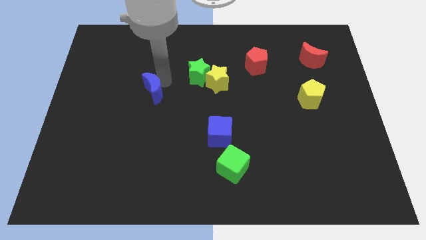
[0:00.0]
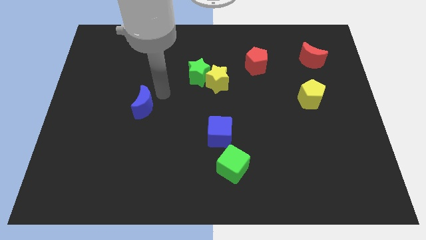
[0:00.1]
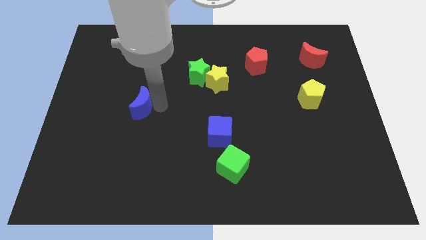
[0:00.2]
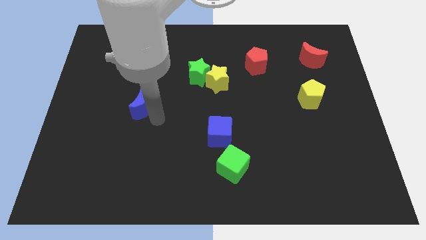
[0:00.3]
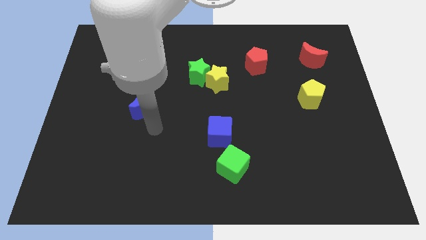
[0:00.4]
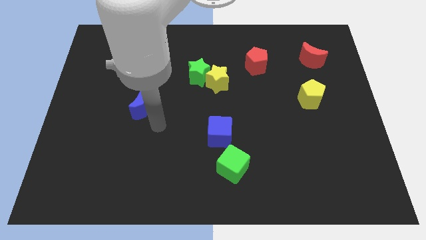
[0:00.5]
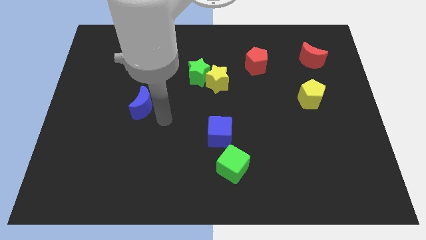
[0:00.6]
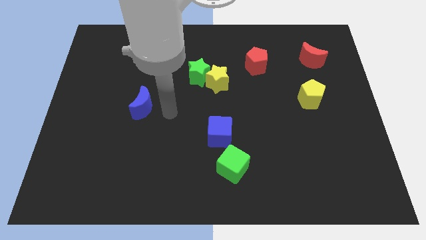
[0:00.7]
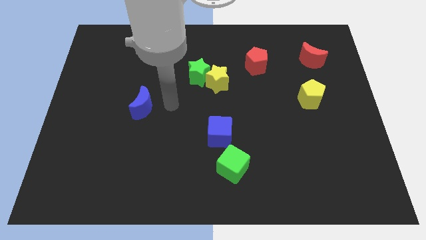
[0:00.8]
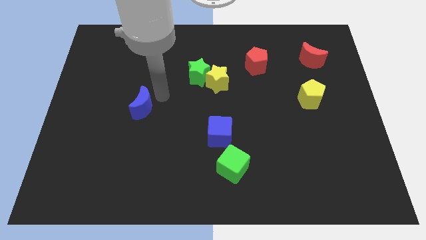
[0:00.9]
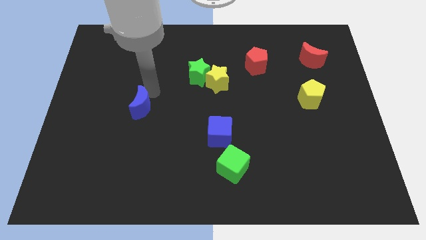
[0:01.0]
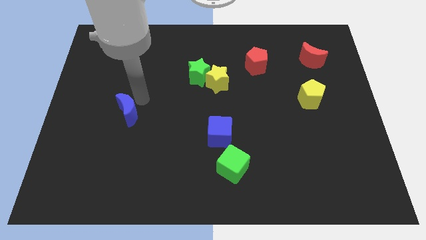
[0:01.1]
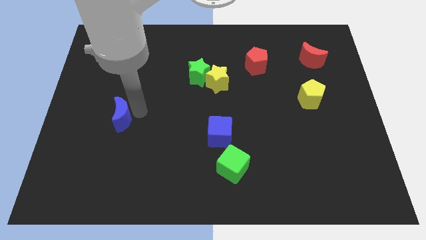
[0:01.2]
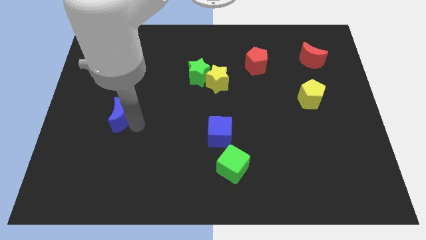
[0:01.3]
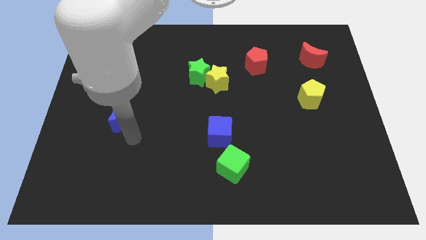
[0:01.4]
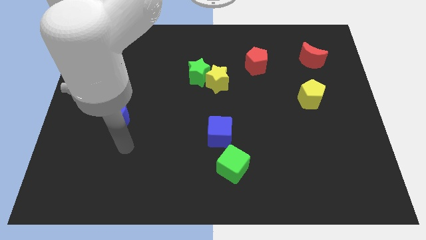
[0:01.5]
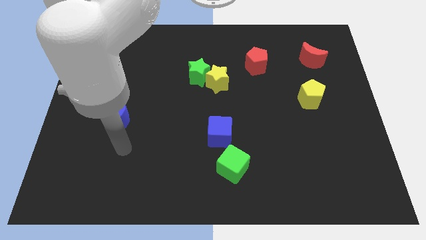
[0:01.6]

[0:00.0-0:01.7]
push the blue crescent diagonally below the green star

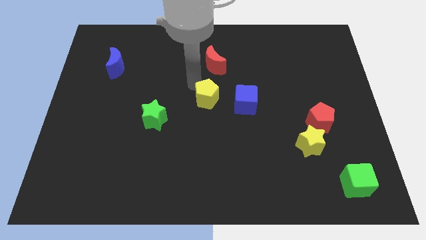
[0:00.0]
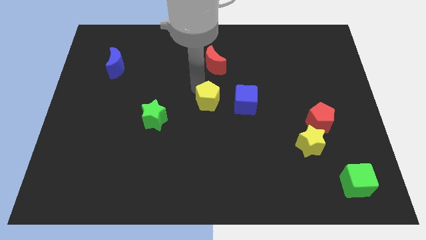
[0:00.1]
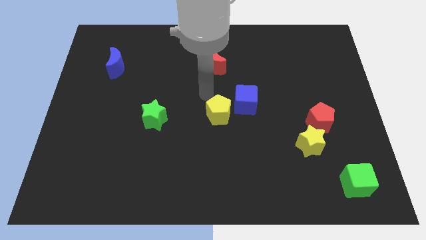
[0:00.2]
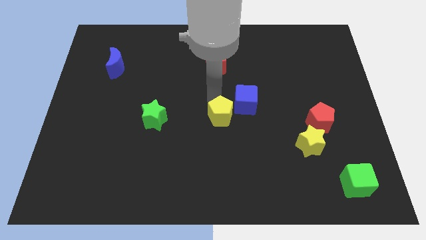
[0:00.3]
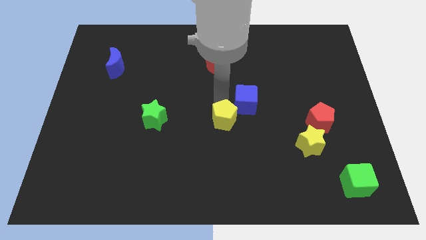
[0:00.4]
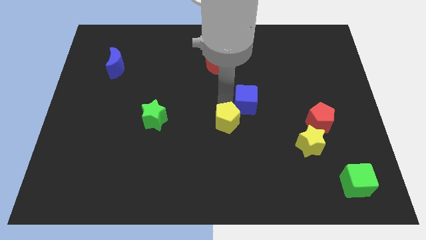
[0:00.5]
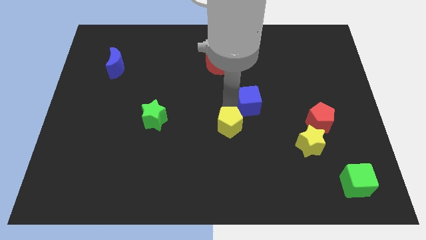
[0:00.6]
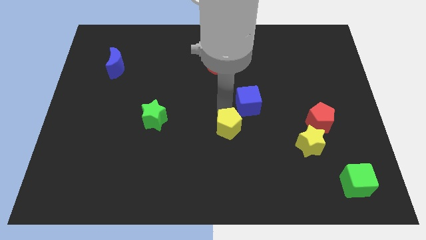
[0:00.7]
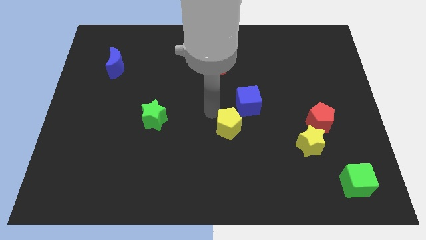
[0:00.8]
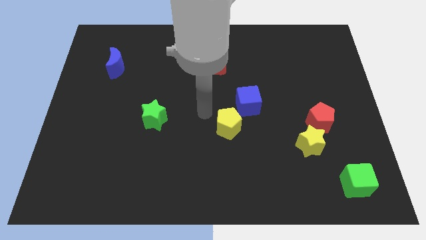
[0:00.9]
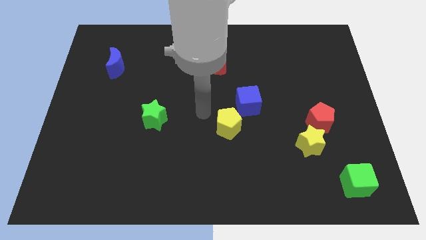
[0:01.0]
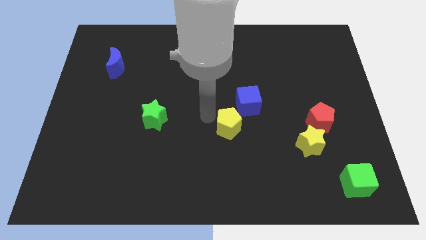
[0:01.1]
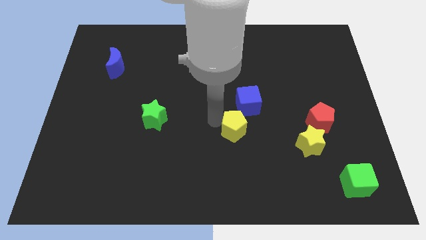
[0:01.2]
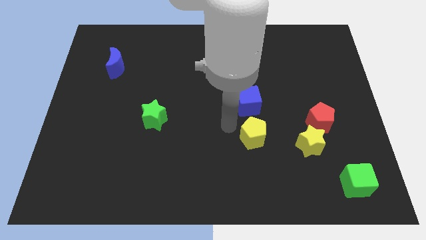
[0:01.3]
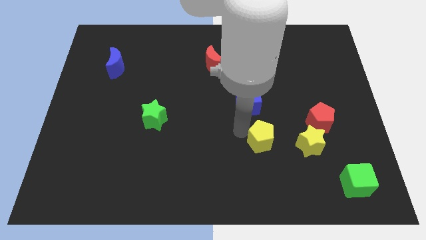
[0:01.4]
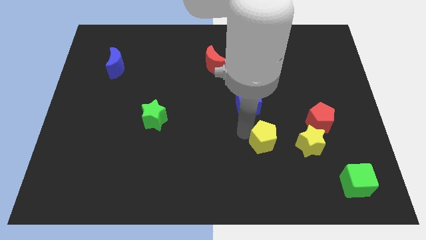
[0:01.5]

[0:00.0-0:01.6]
put the yellow pentagon to the bottom right side of the blue cube

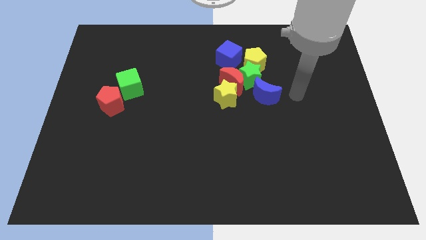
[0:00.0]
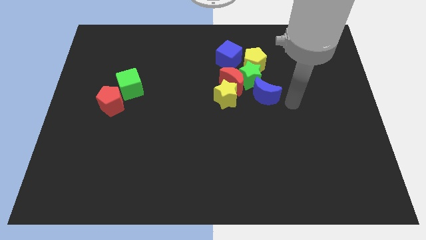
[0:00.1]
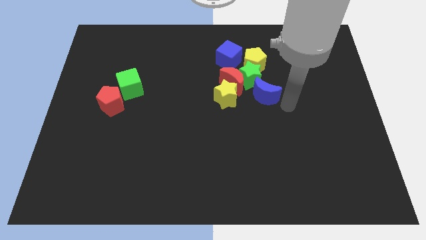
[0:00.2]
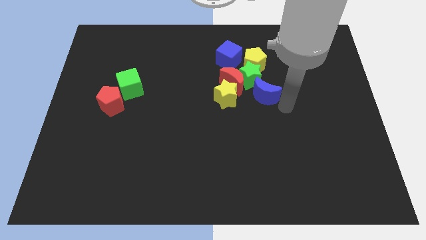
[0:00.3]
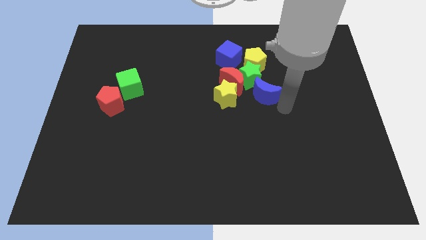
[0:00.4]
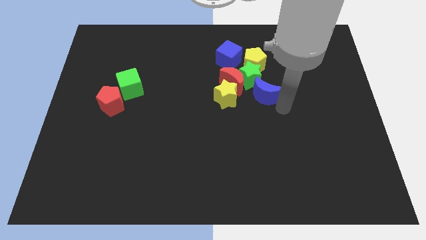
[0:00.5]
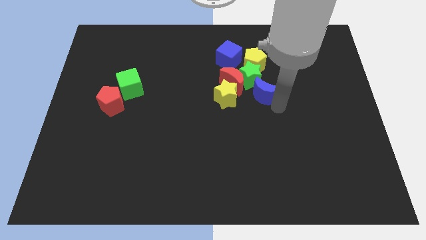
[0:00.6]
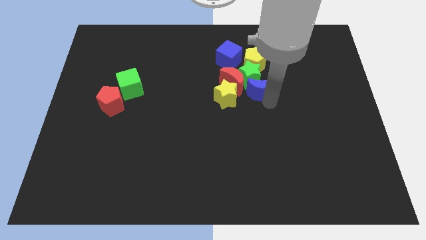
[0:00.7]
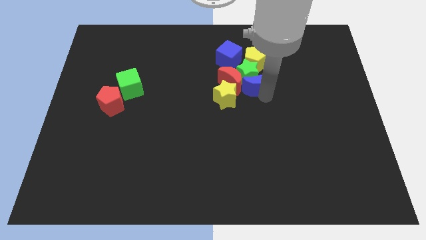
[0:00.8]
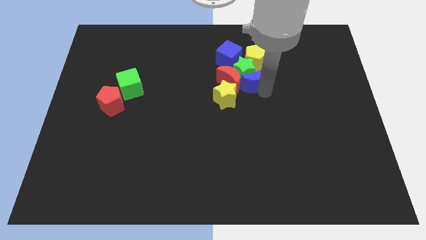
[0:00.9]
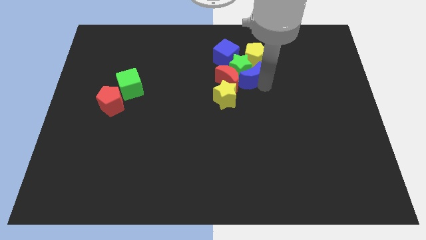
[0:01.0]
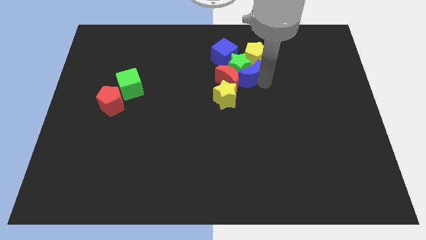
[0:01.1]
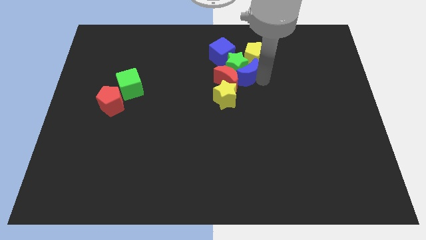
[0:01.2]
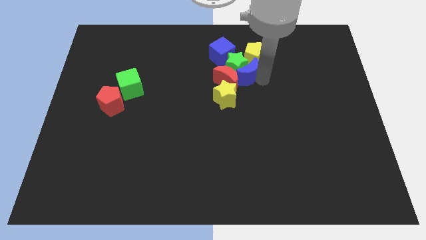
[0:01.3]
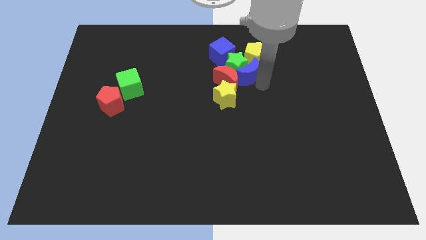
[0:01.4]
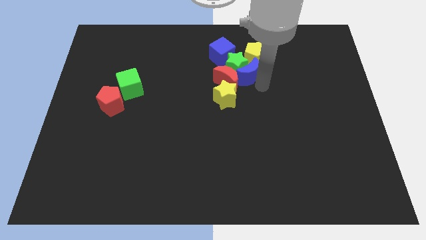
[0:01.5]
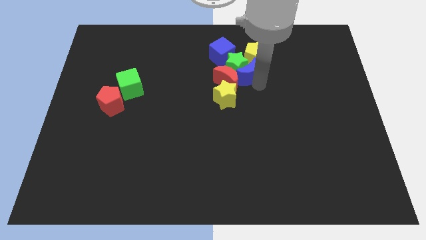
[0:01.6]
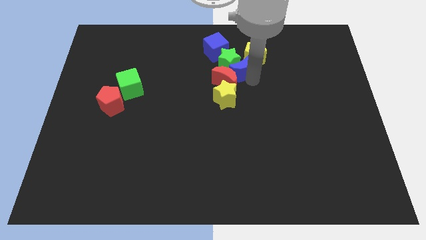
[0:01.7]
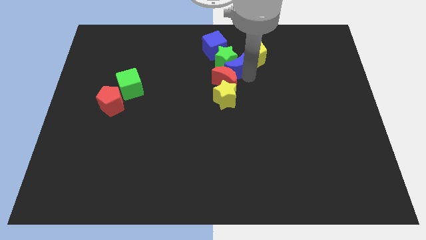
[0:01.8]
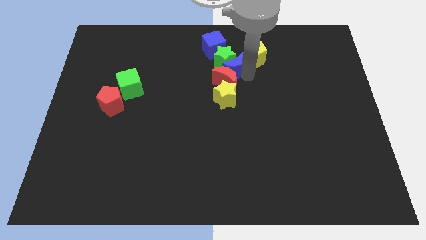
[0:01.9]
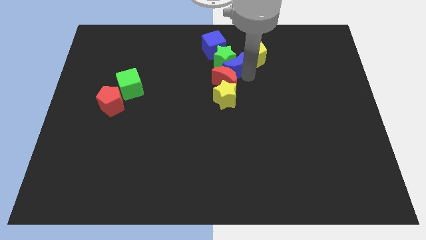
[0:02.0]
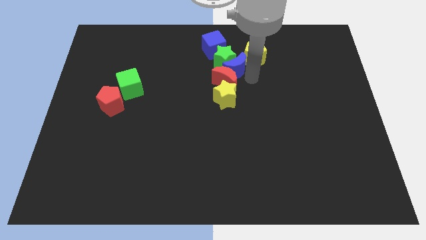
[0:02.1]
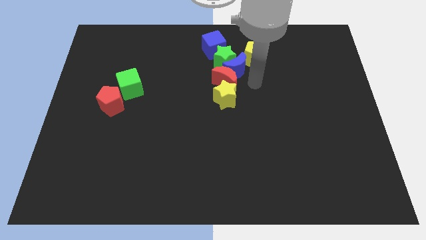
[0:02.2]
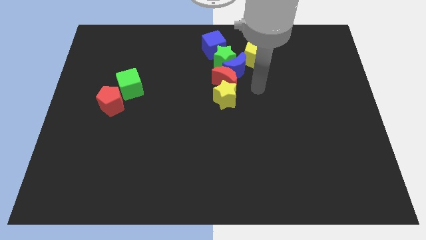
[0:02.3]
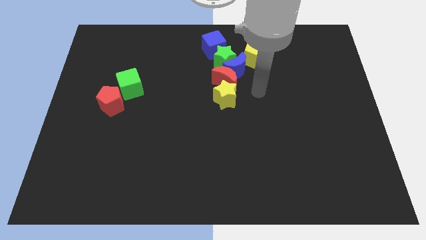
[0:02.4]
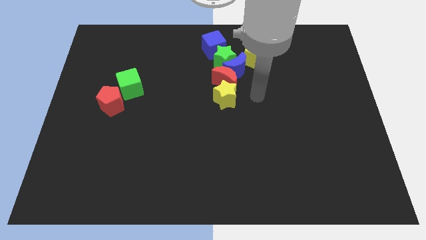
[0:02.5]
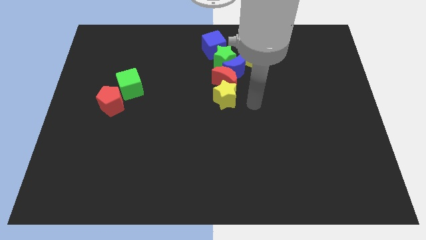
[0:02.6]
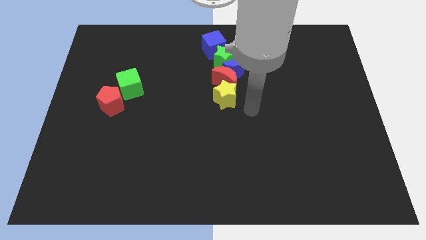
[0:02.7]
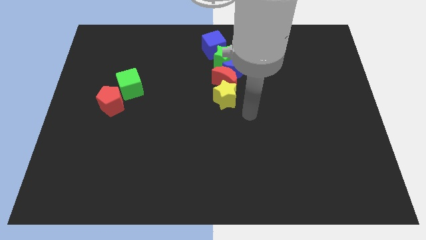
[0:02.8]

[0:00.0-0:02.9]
push the blue cube and the green star with the blue crescent towards the top center of the board

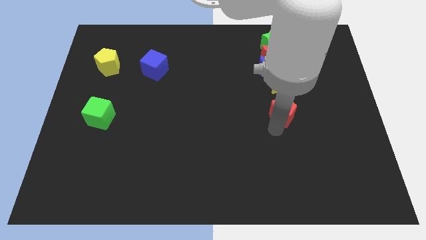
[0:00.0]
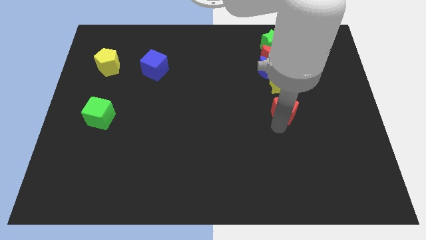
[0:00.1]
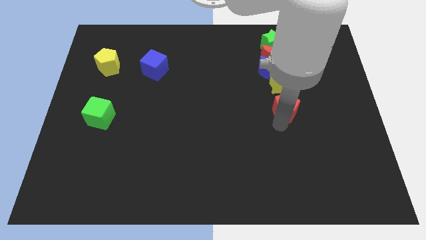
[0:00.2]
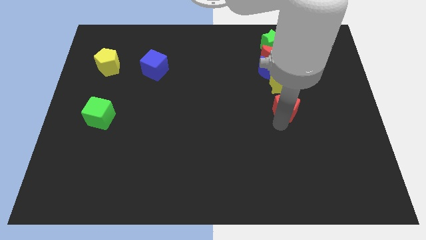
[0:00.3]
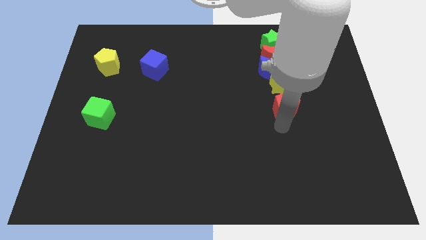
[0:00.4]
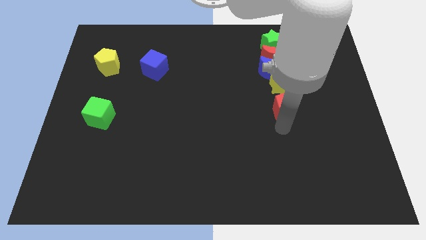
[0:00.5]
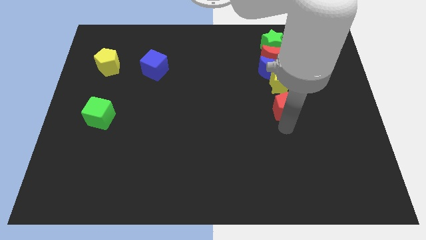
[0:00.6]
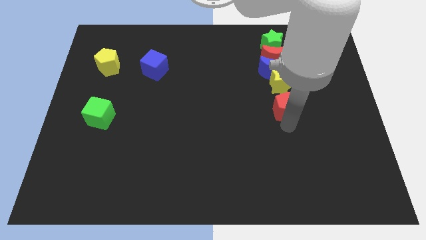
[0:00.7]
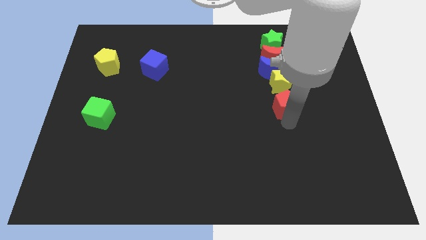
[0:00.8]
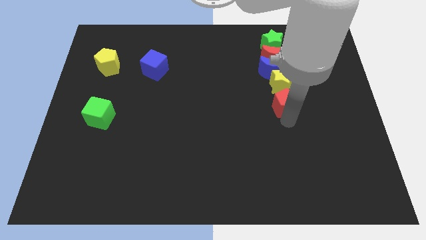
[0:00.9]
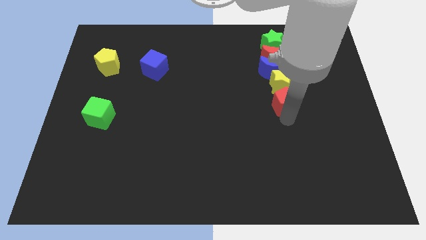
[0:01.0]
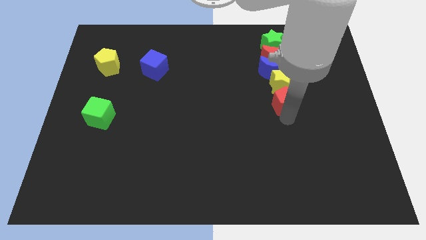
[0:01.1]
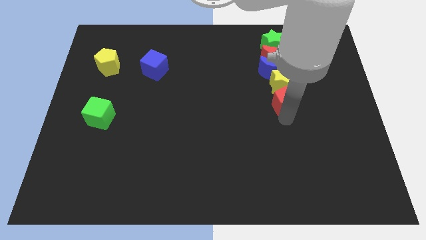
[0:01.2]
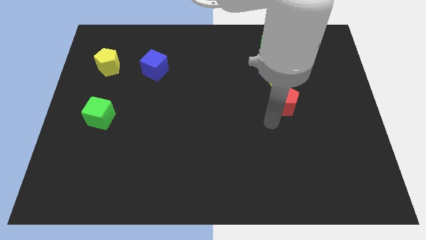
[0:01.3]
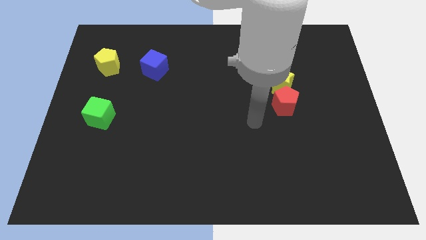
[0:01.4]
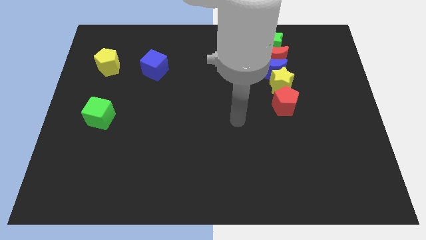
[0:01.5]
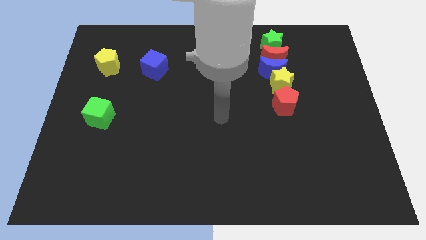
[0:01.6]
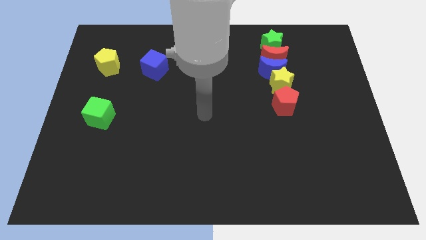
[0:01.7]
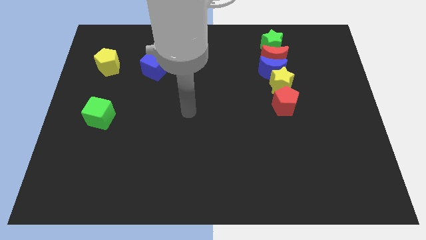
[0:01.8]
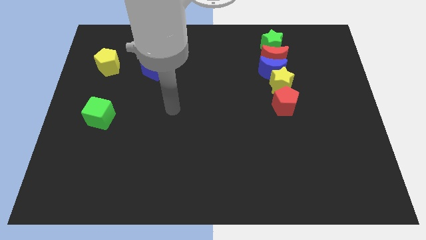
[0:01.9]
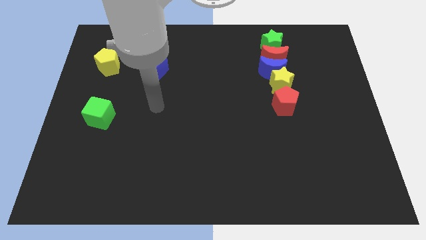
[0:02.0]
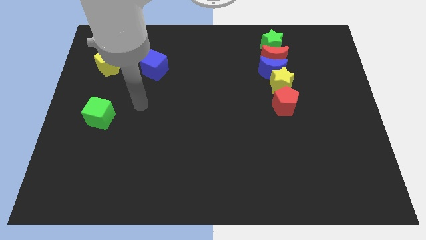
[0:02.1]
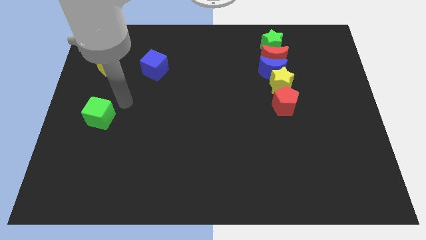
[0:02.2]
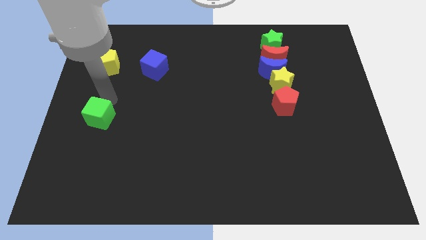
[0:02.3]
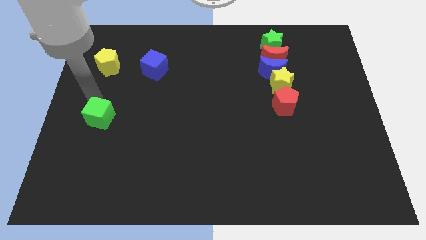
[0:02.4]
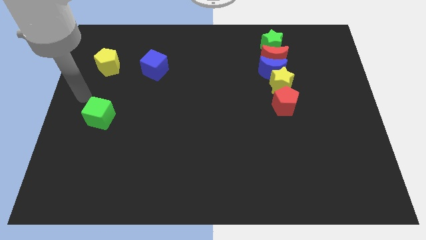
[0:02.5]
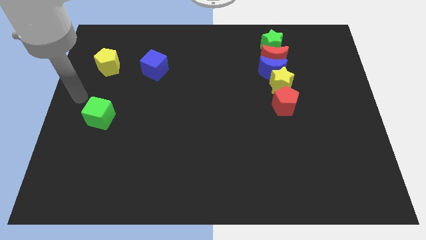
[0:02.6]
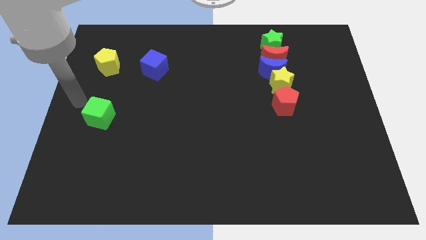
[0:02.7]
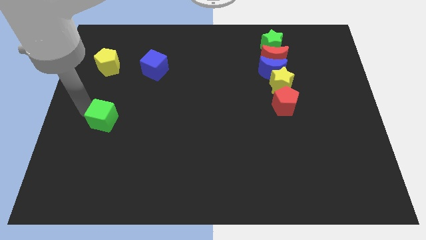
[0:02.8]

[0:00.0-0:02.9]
move your arm towards the green cube
